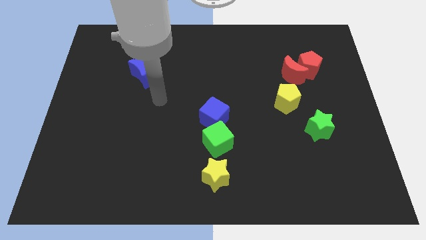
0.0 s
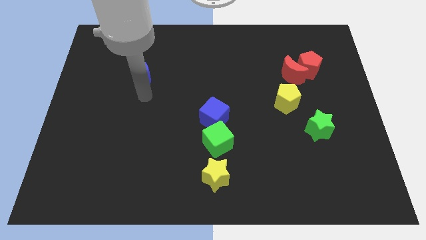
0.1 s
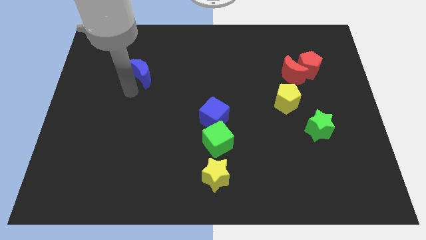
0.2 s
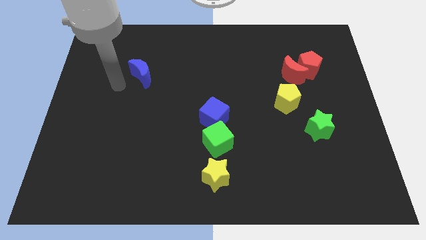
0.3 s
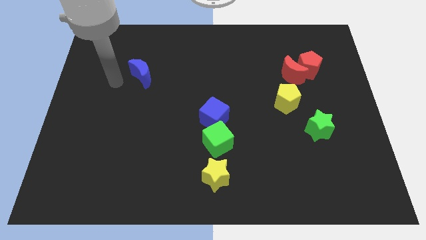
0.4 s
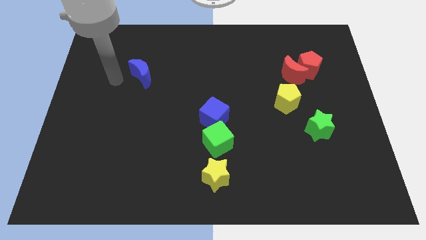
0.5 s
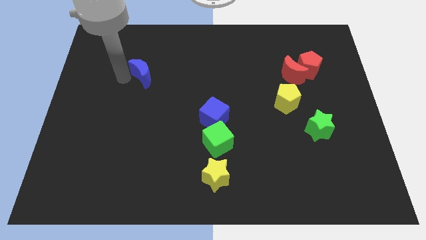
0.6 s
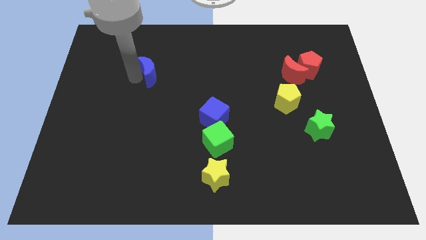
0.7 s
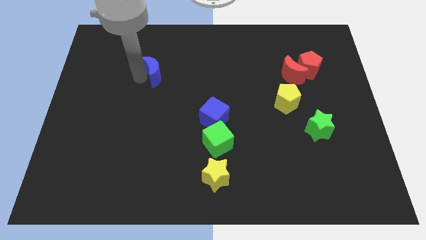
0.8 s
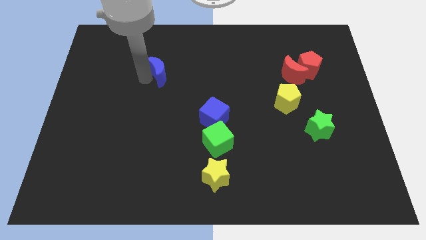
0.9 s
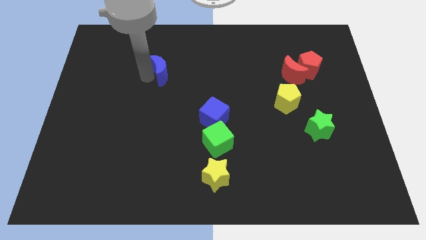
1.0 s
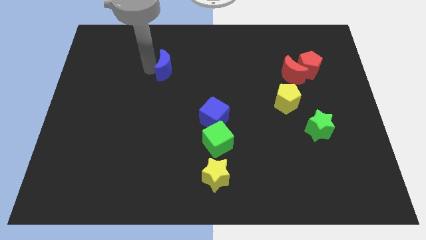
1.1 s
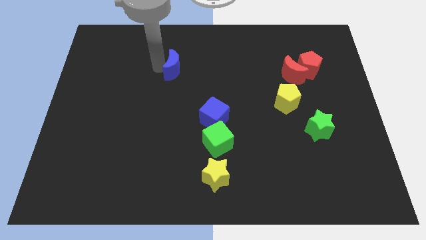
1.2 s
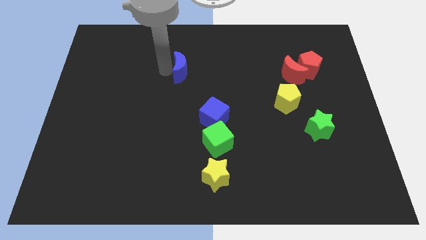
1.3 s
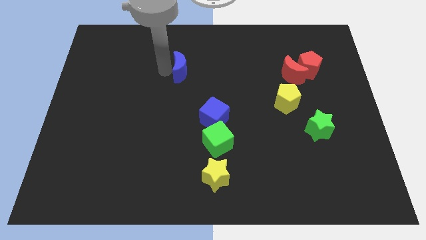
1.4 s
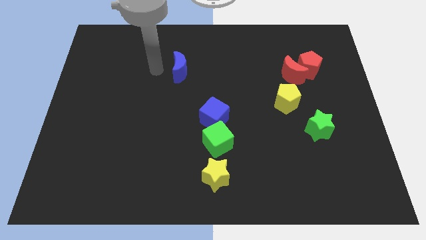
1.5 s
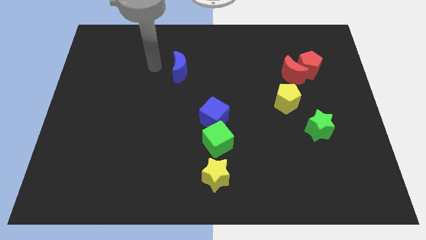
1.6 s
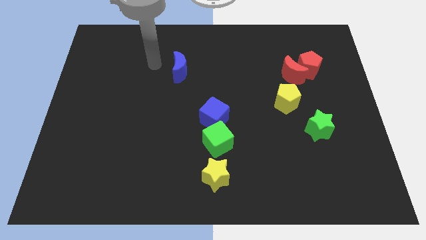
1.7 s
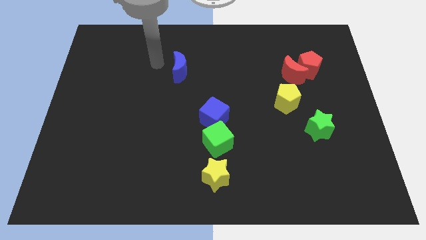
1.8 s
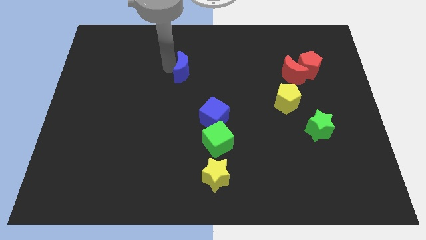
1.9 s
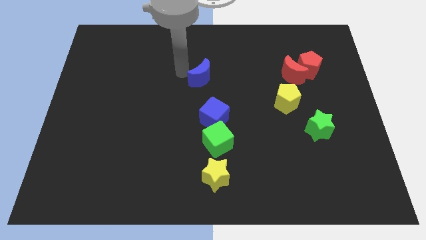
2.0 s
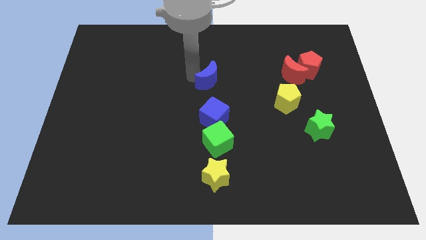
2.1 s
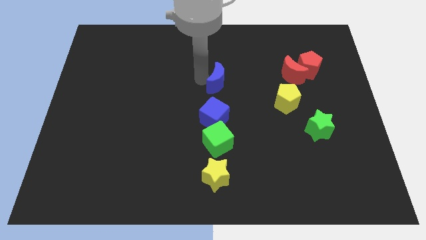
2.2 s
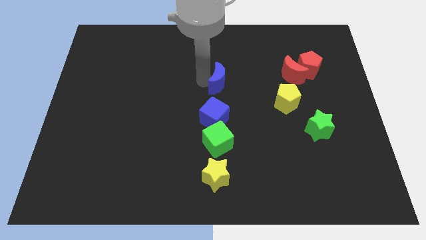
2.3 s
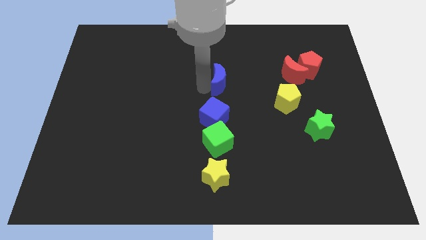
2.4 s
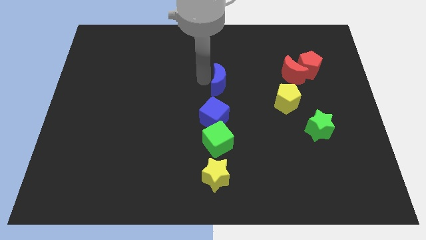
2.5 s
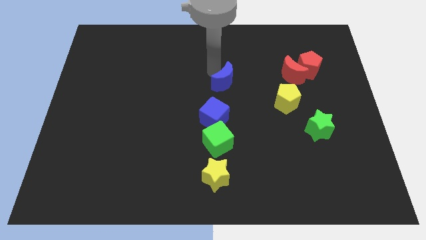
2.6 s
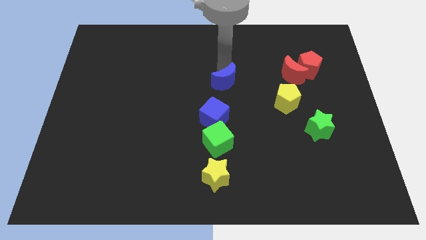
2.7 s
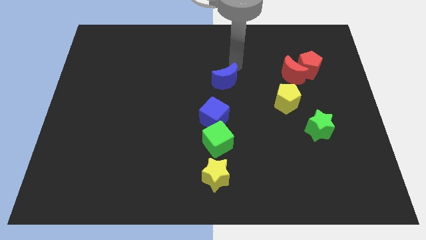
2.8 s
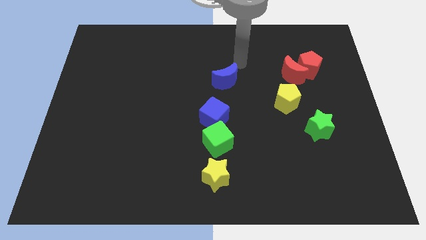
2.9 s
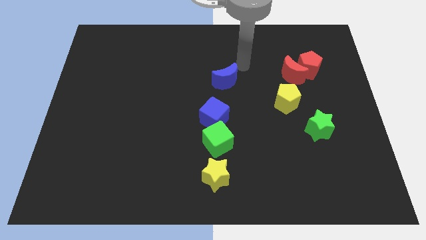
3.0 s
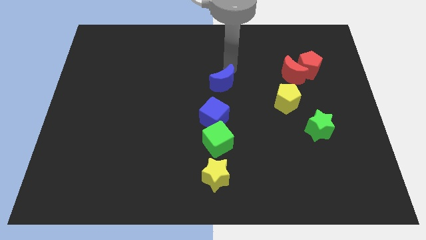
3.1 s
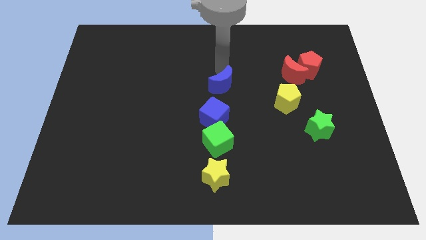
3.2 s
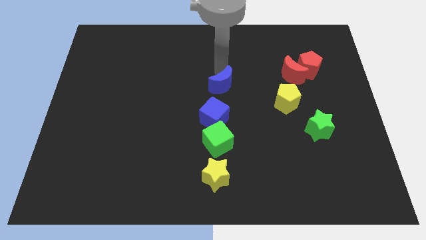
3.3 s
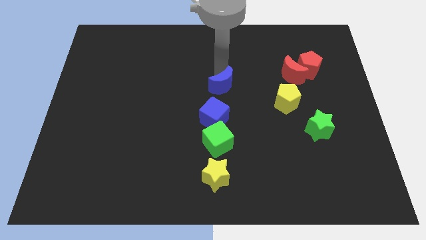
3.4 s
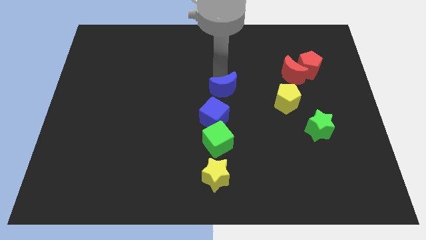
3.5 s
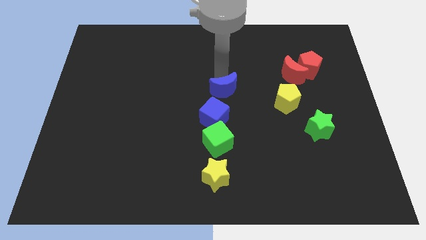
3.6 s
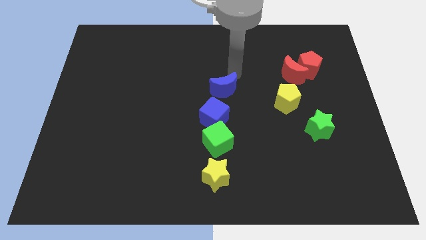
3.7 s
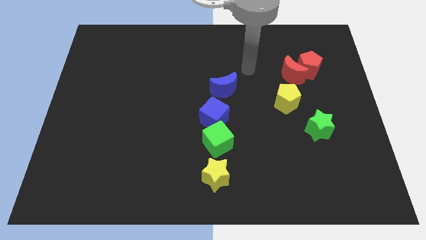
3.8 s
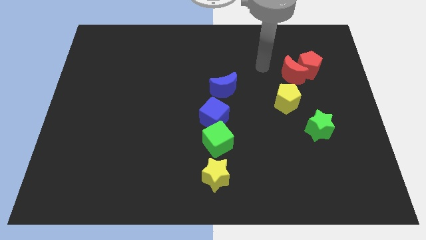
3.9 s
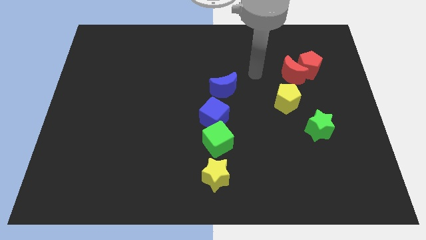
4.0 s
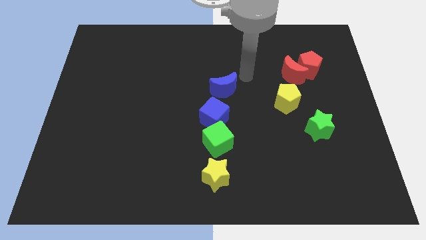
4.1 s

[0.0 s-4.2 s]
move the blue crescent towards the top left of the blue cube

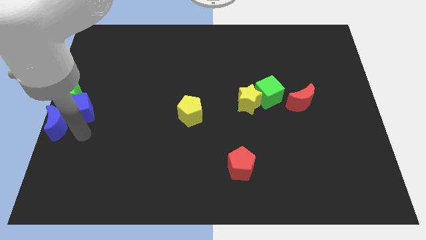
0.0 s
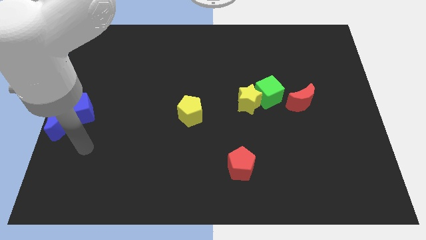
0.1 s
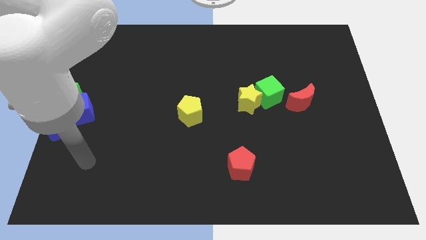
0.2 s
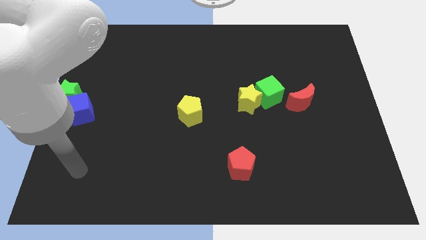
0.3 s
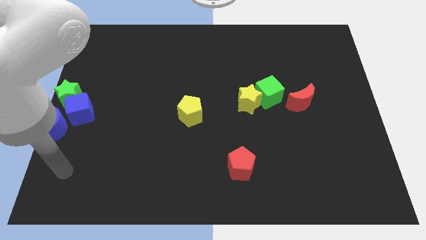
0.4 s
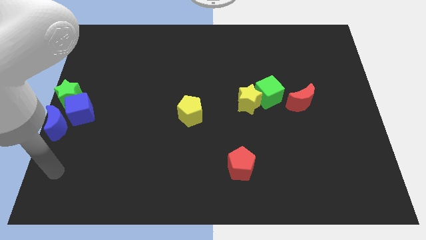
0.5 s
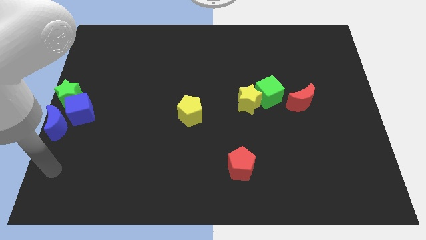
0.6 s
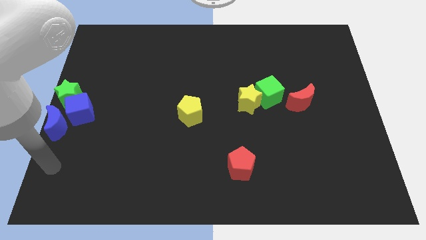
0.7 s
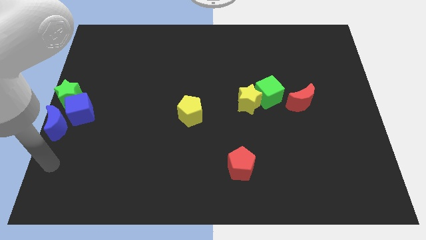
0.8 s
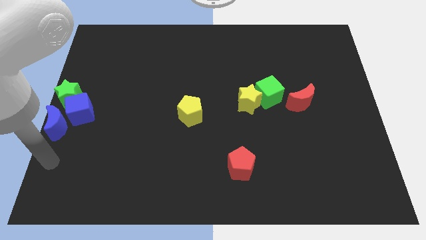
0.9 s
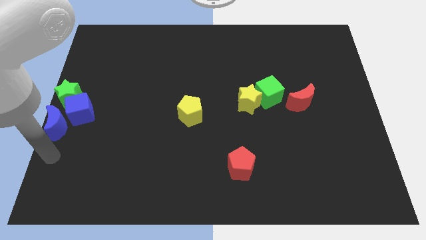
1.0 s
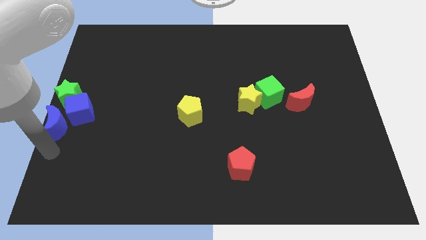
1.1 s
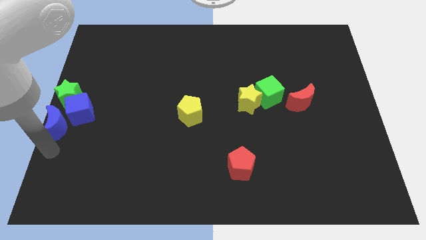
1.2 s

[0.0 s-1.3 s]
point the arm below the blue crescent

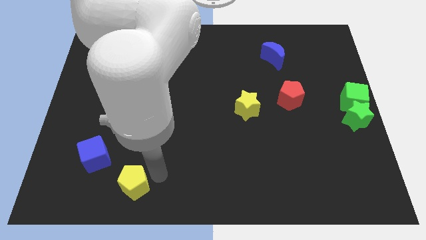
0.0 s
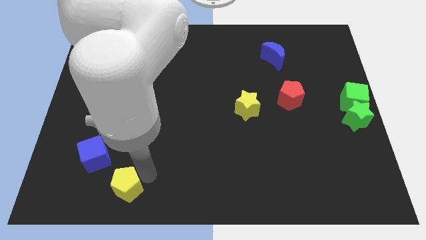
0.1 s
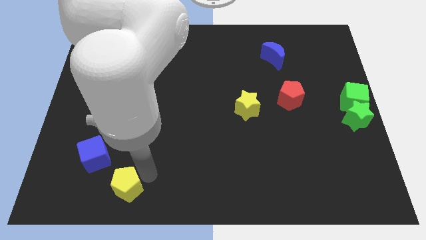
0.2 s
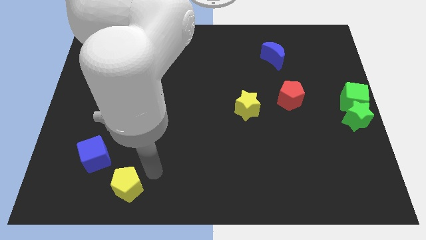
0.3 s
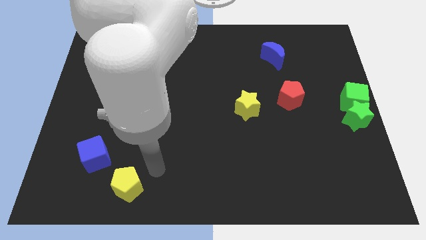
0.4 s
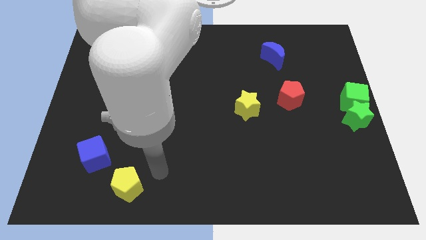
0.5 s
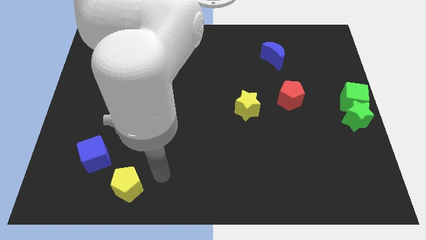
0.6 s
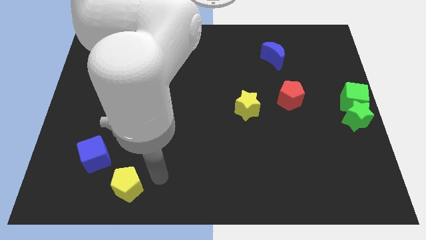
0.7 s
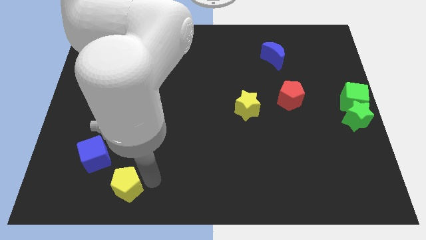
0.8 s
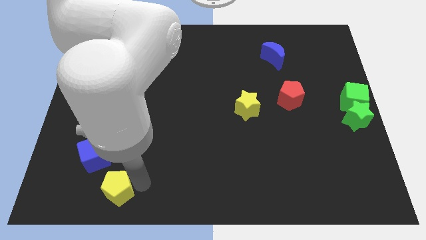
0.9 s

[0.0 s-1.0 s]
place the yellow pentagon below the blue cube

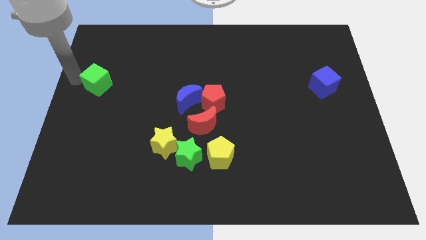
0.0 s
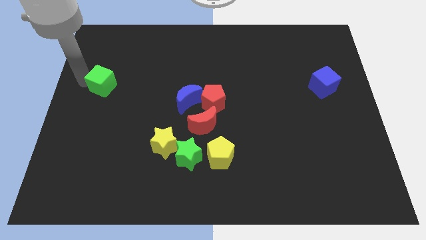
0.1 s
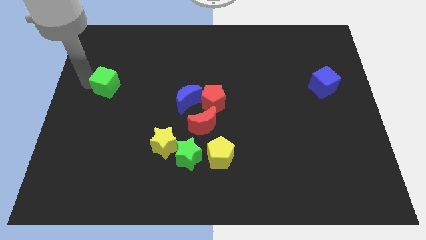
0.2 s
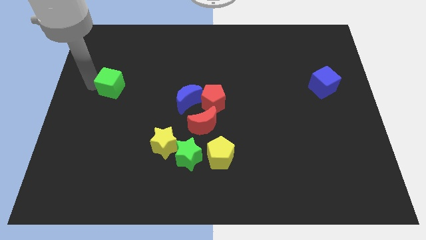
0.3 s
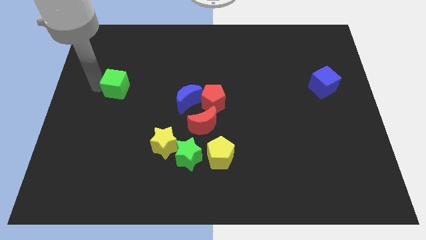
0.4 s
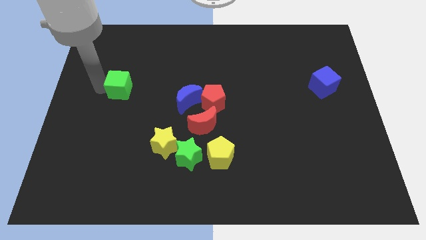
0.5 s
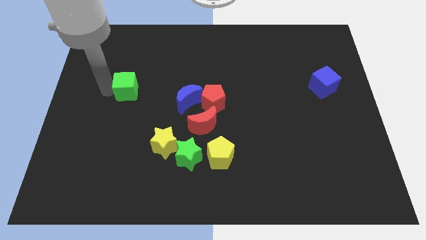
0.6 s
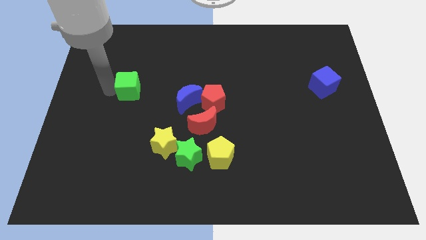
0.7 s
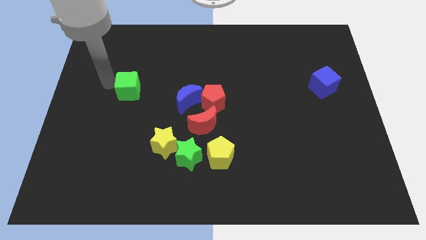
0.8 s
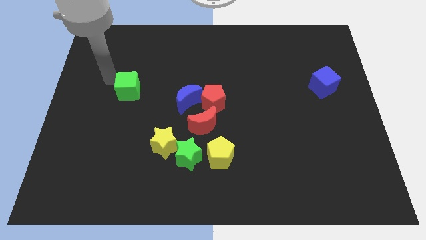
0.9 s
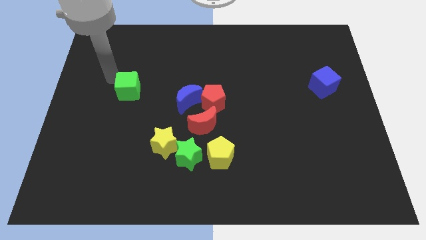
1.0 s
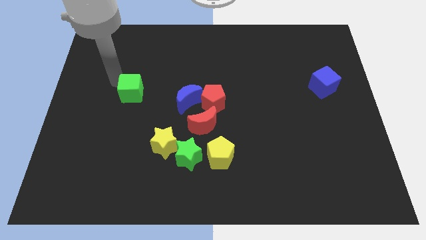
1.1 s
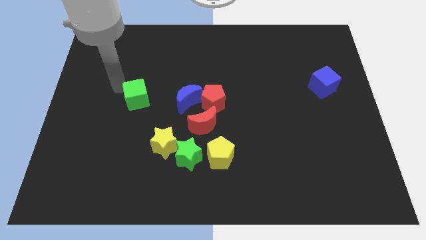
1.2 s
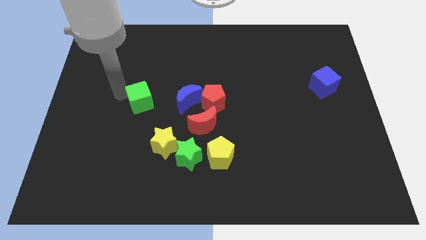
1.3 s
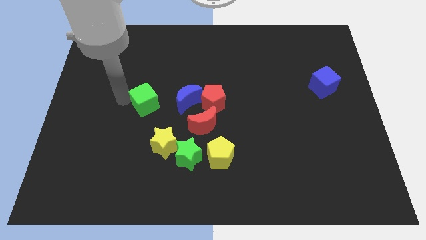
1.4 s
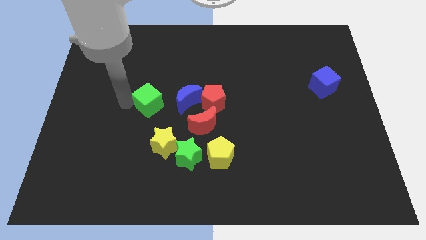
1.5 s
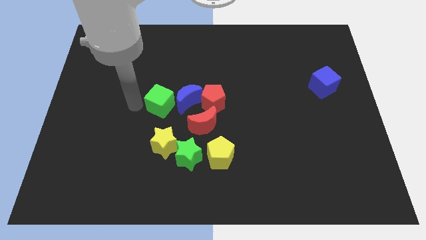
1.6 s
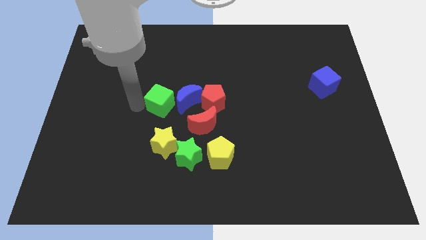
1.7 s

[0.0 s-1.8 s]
move the green cube close to the blue crescent

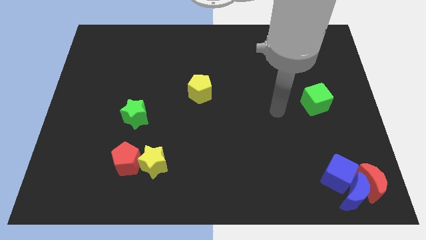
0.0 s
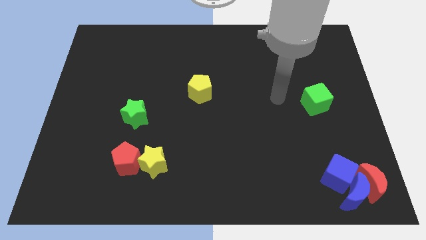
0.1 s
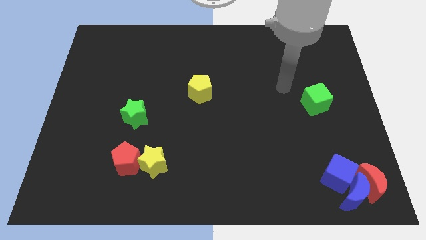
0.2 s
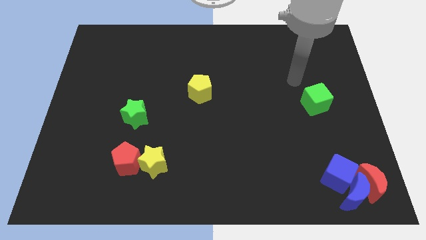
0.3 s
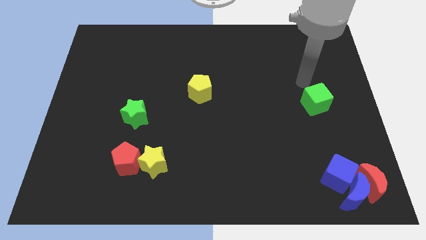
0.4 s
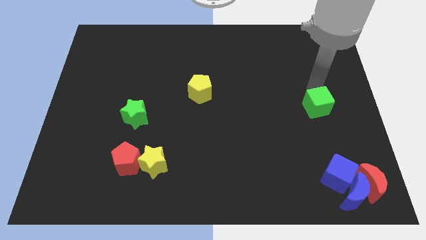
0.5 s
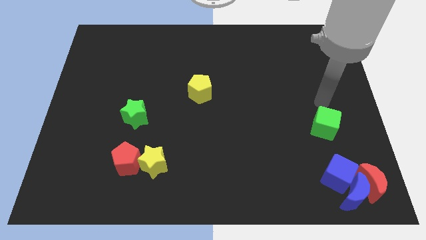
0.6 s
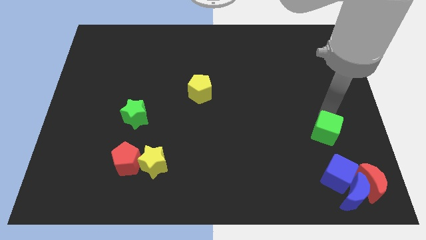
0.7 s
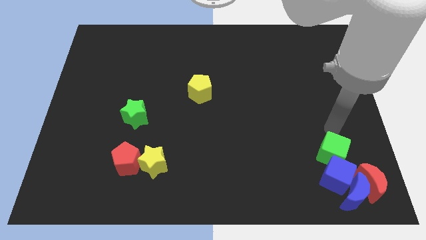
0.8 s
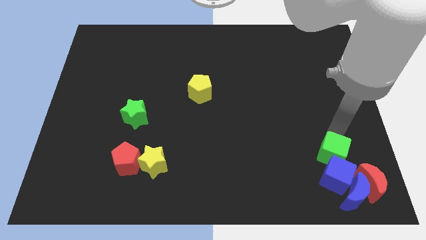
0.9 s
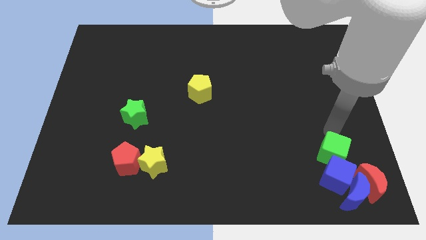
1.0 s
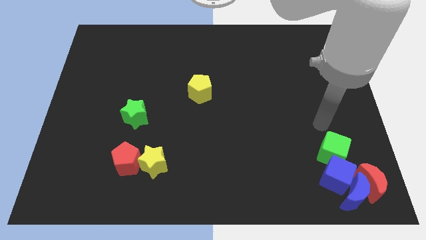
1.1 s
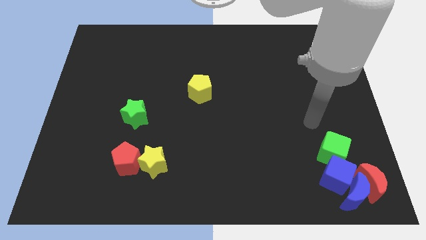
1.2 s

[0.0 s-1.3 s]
move the green cube towards the blue cube
